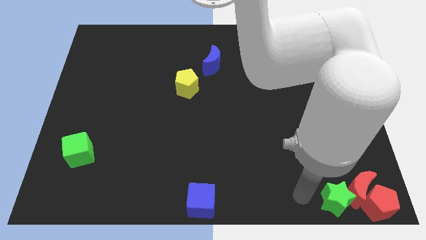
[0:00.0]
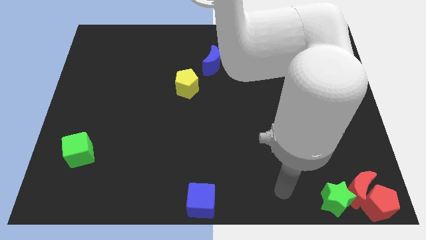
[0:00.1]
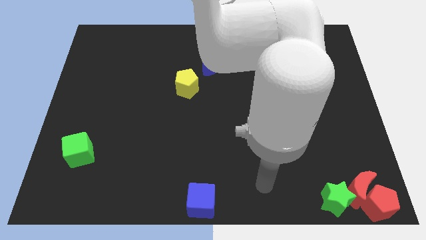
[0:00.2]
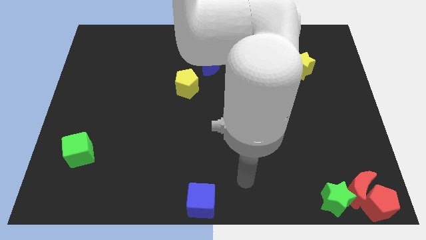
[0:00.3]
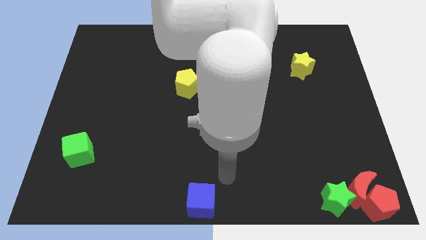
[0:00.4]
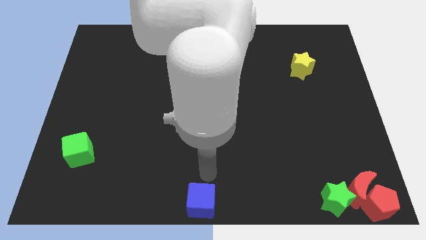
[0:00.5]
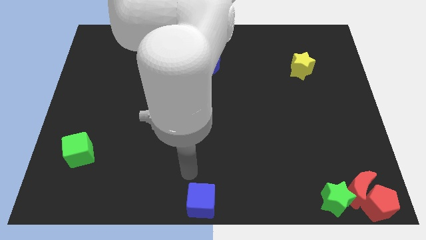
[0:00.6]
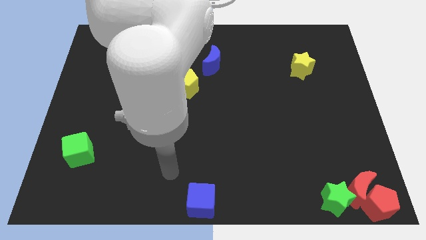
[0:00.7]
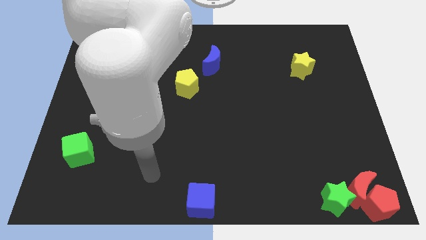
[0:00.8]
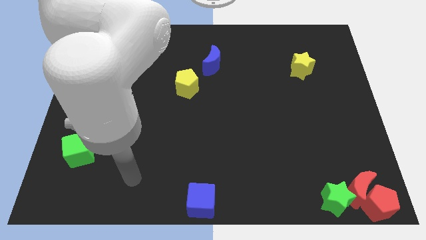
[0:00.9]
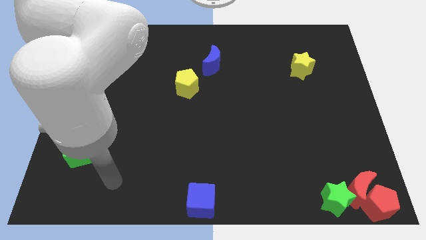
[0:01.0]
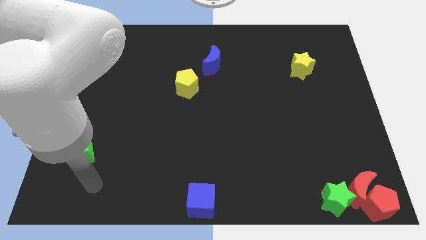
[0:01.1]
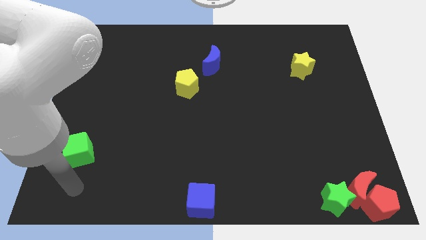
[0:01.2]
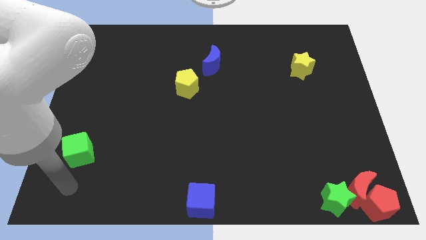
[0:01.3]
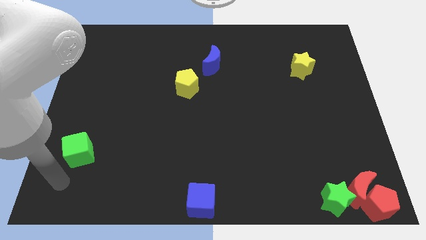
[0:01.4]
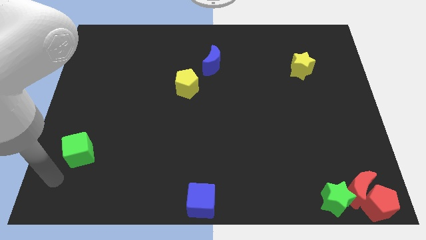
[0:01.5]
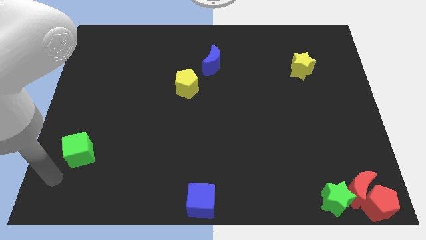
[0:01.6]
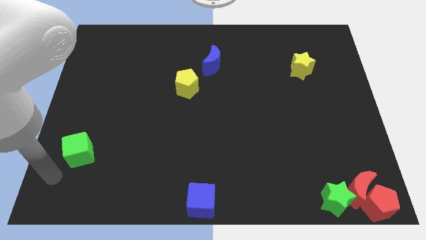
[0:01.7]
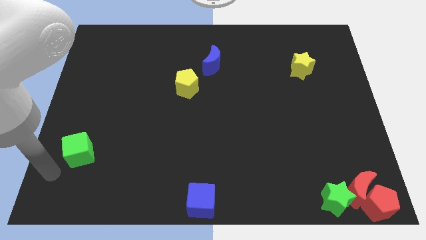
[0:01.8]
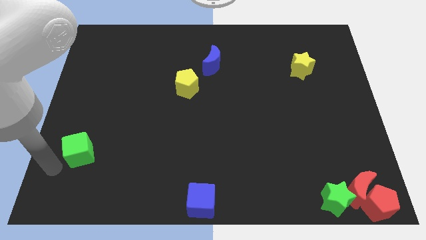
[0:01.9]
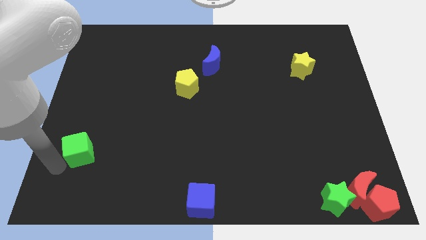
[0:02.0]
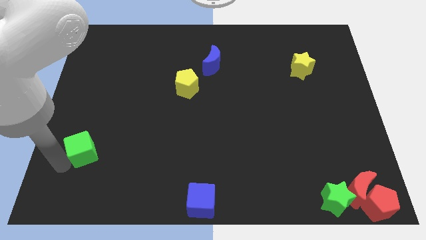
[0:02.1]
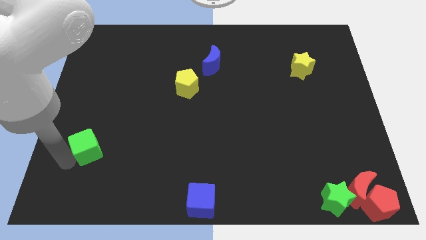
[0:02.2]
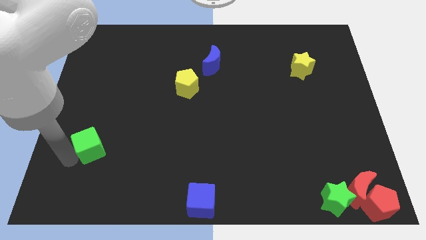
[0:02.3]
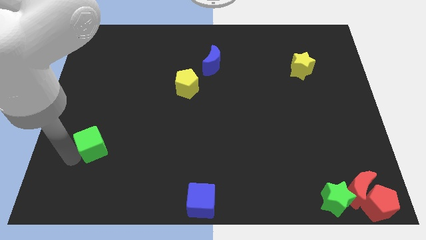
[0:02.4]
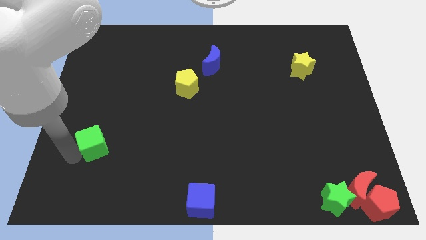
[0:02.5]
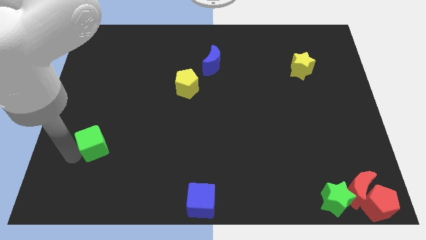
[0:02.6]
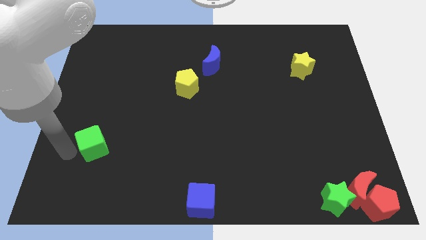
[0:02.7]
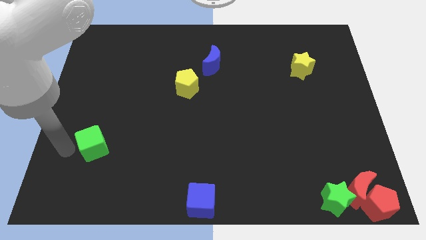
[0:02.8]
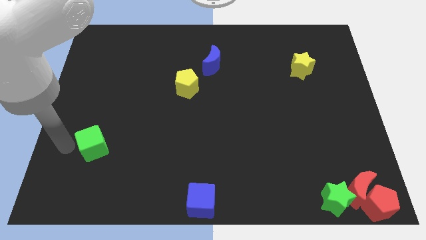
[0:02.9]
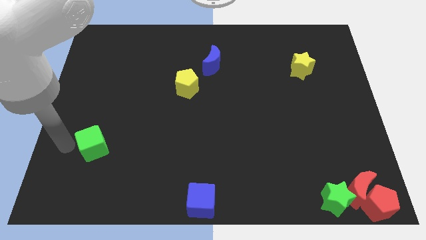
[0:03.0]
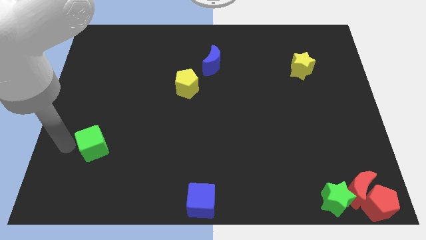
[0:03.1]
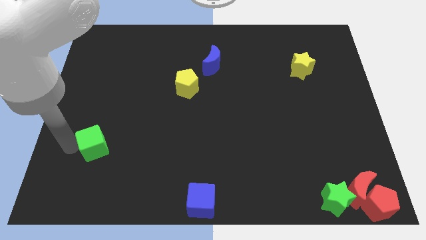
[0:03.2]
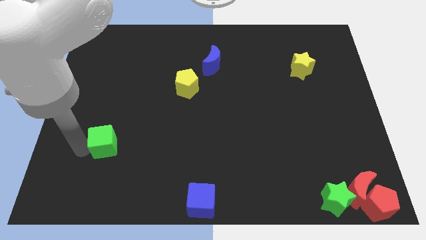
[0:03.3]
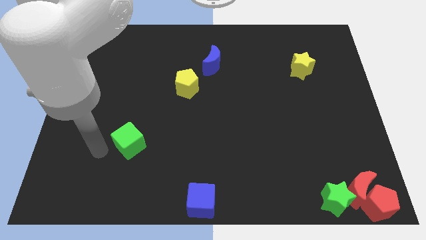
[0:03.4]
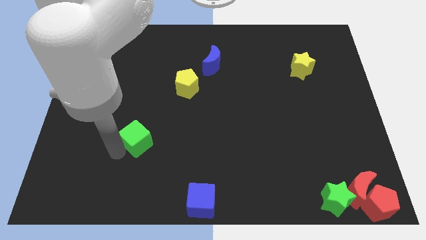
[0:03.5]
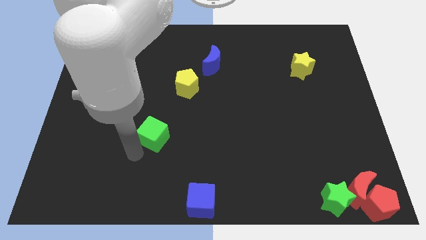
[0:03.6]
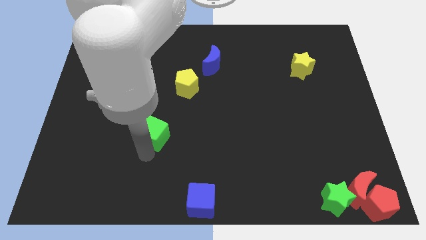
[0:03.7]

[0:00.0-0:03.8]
move green cube to the right side of the board

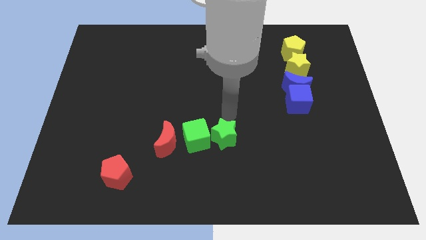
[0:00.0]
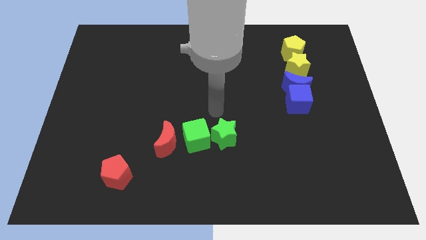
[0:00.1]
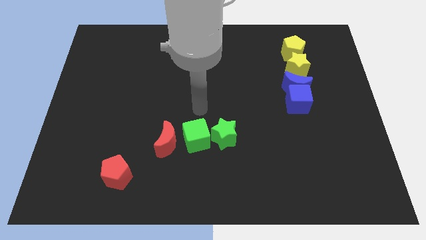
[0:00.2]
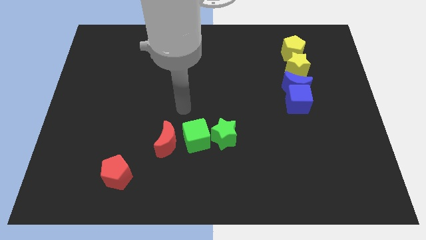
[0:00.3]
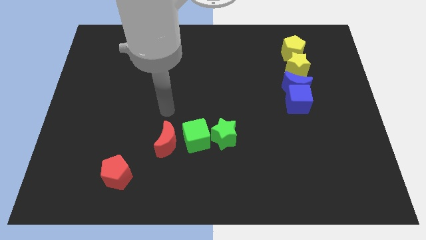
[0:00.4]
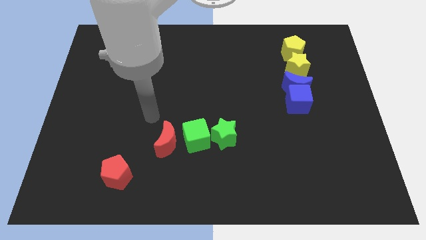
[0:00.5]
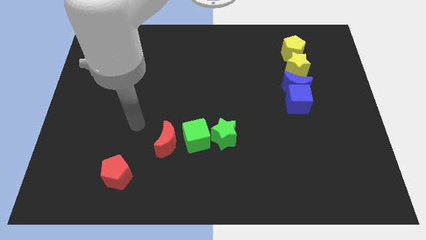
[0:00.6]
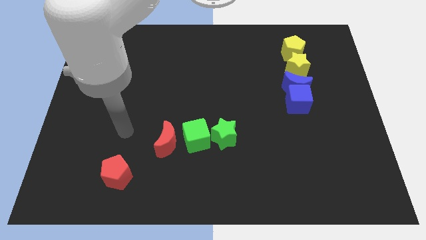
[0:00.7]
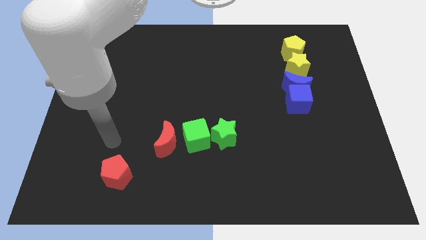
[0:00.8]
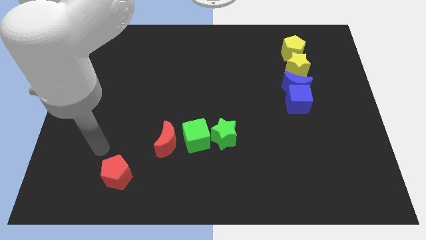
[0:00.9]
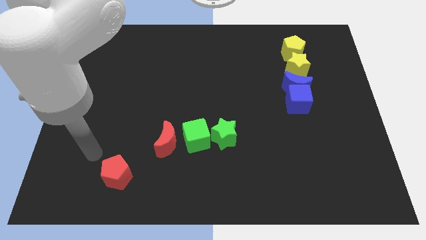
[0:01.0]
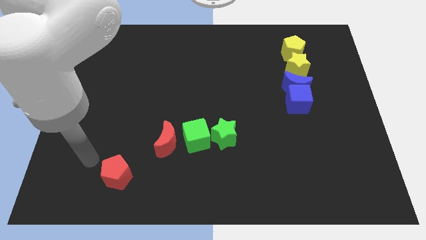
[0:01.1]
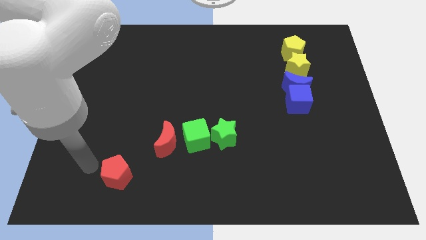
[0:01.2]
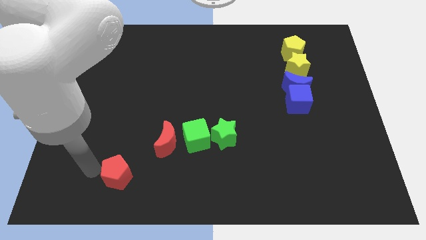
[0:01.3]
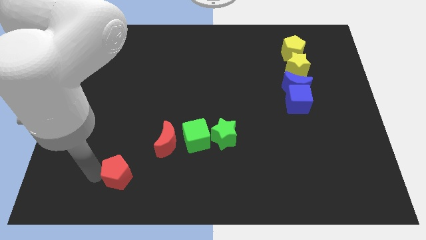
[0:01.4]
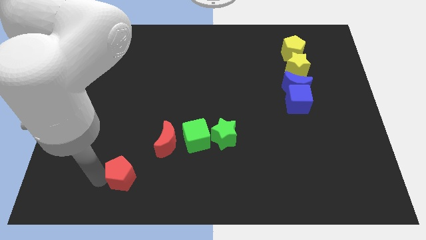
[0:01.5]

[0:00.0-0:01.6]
touch the red pentagon

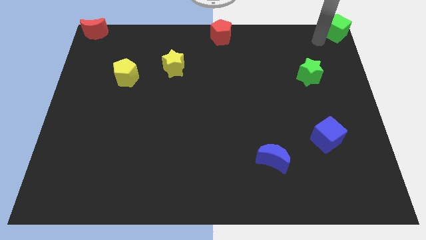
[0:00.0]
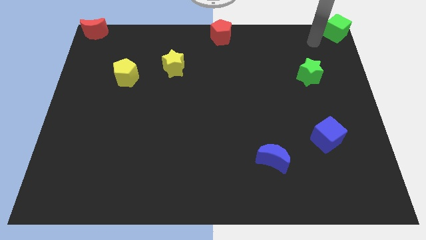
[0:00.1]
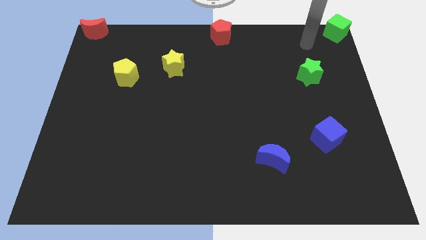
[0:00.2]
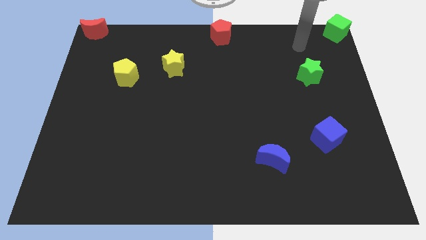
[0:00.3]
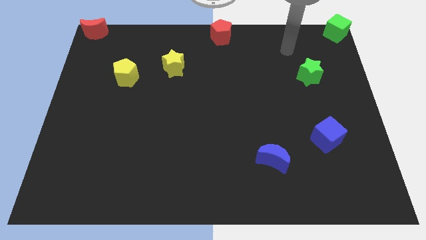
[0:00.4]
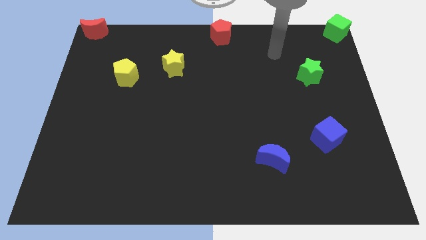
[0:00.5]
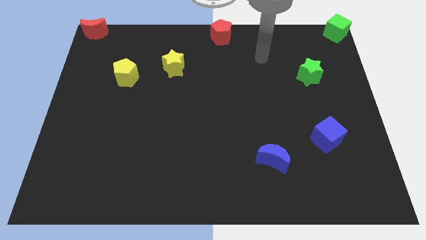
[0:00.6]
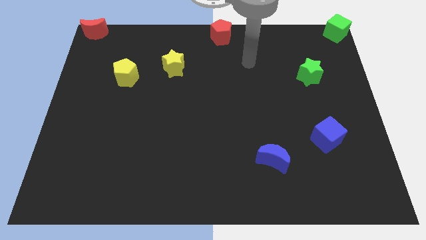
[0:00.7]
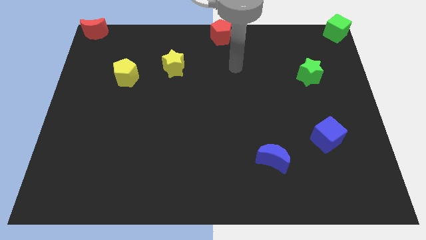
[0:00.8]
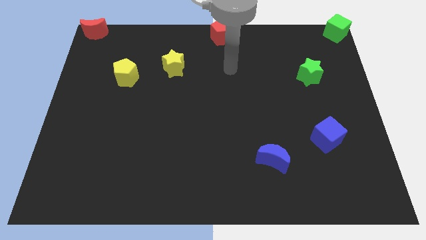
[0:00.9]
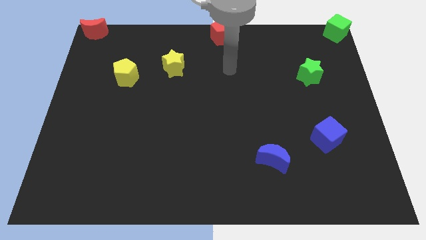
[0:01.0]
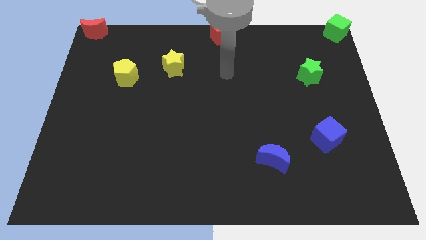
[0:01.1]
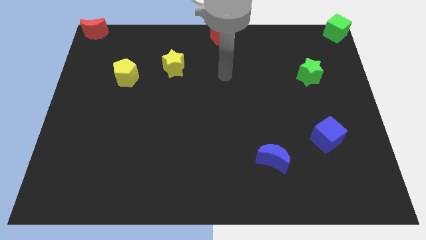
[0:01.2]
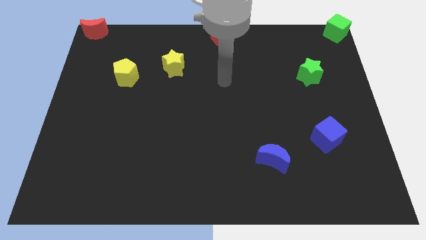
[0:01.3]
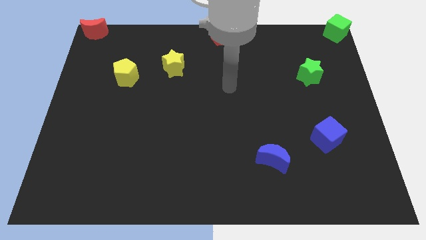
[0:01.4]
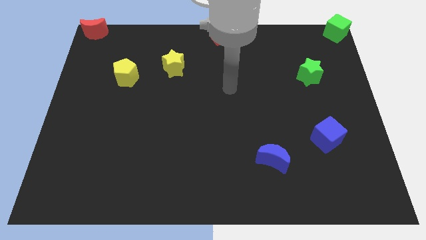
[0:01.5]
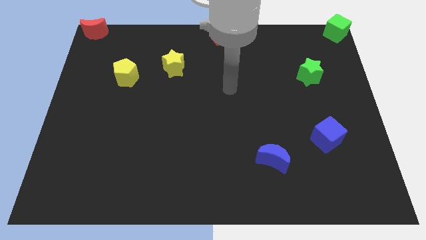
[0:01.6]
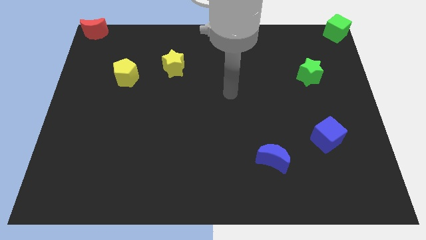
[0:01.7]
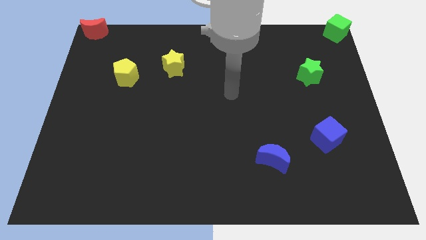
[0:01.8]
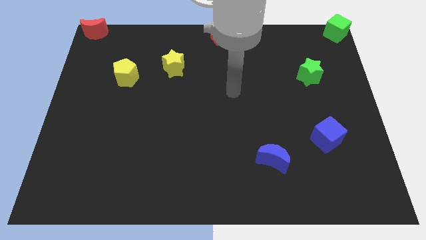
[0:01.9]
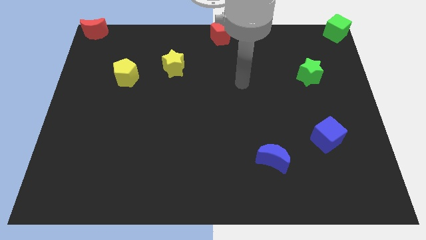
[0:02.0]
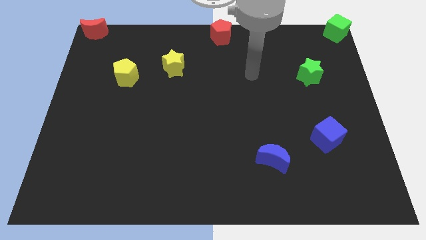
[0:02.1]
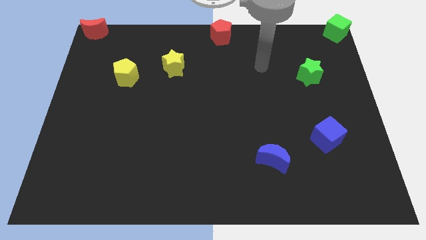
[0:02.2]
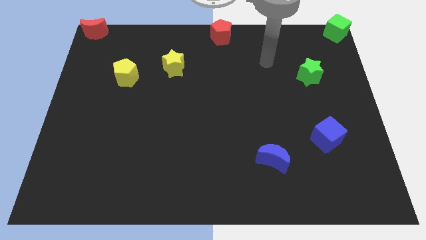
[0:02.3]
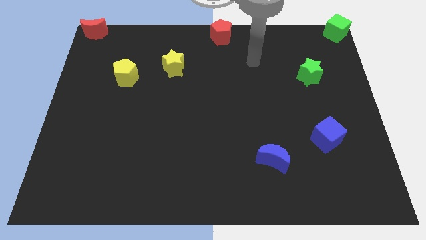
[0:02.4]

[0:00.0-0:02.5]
move your arm and point between green star and red pentagon

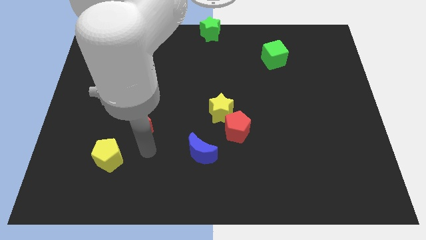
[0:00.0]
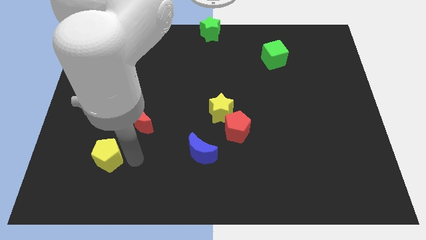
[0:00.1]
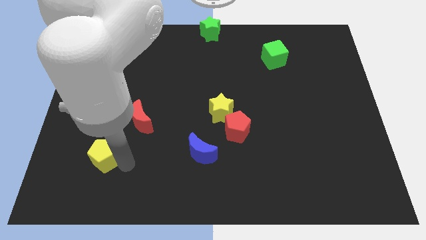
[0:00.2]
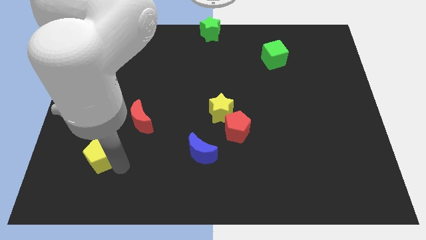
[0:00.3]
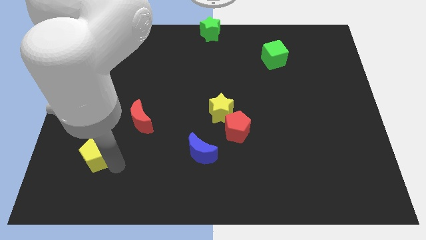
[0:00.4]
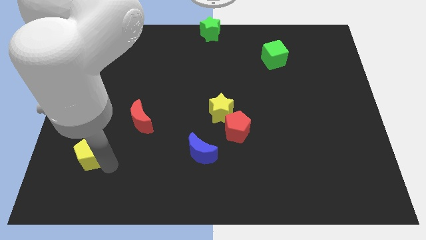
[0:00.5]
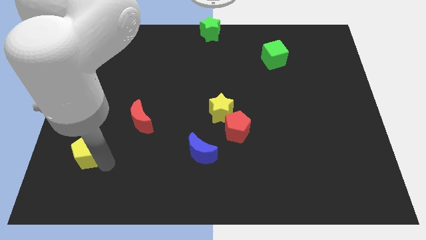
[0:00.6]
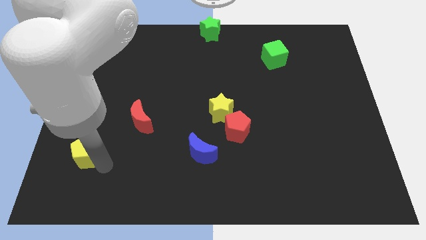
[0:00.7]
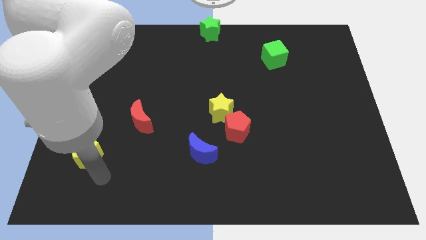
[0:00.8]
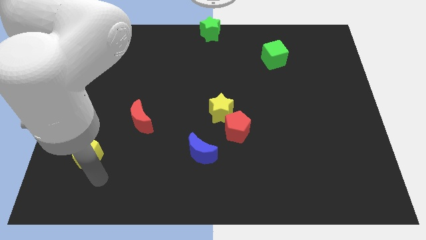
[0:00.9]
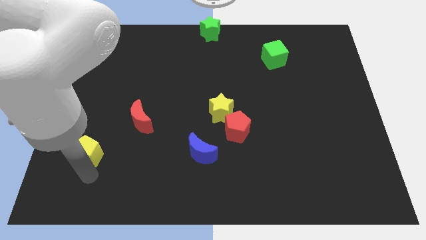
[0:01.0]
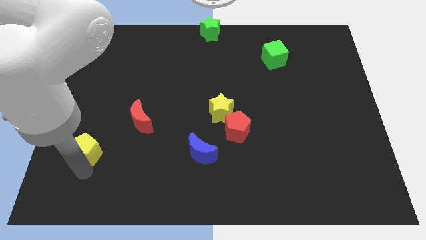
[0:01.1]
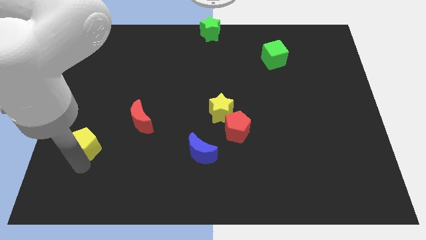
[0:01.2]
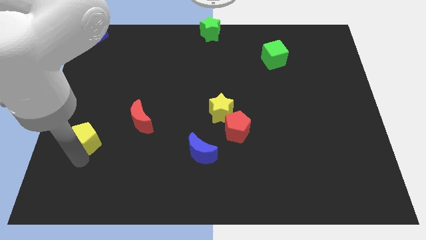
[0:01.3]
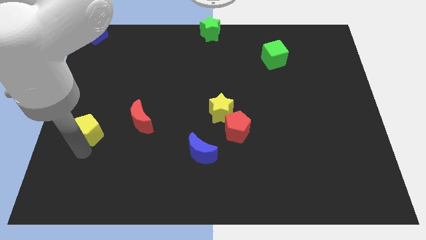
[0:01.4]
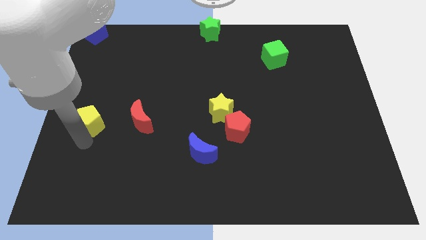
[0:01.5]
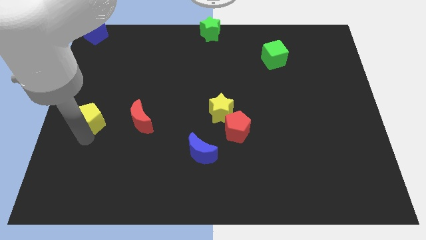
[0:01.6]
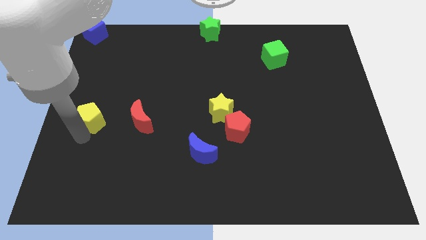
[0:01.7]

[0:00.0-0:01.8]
move yellow pentagon left of red crescent
